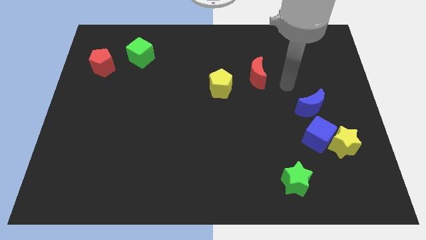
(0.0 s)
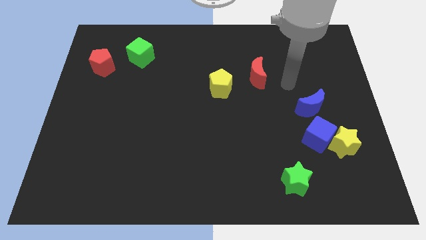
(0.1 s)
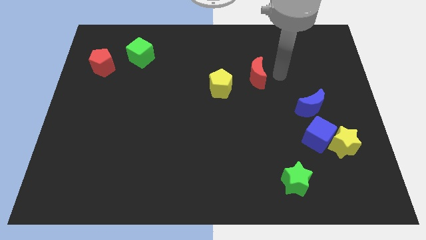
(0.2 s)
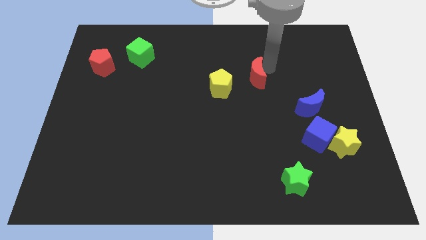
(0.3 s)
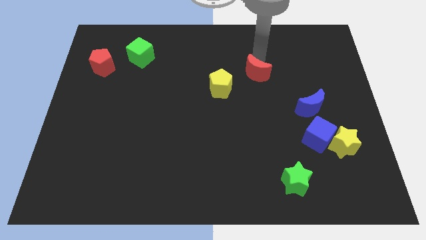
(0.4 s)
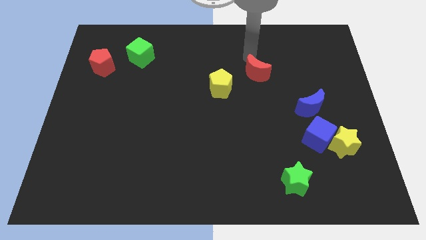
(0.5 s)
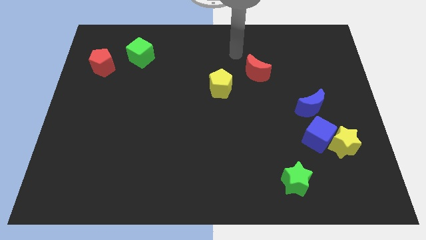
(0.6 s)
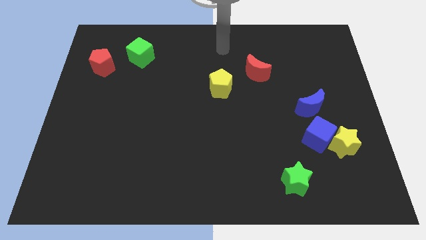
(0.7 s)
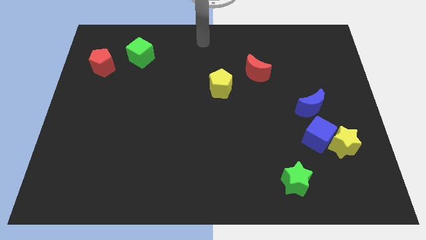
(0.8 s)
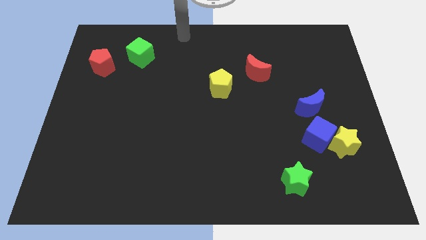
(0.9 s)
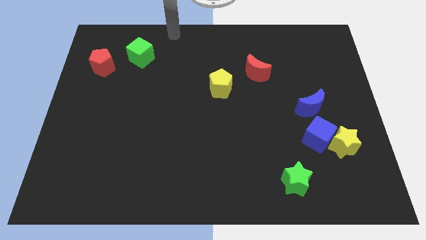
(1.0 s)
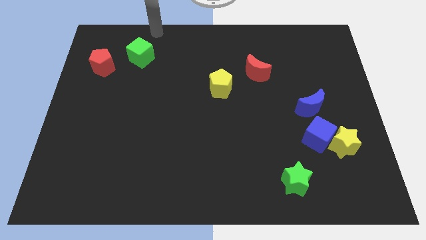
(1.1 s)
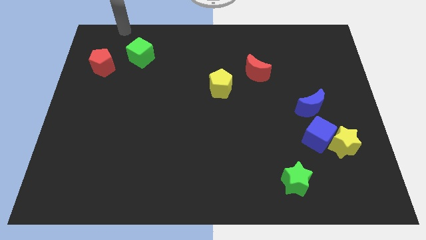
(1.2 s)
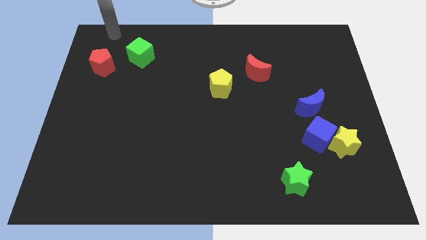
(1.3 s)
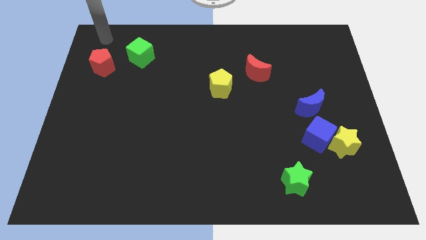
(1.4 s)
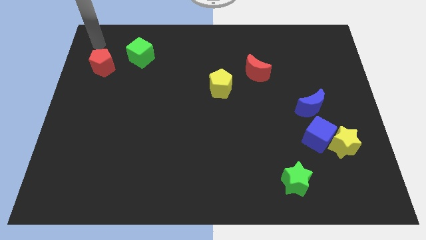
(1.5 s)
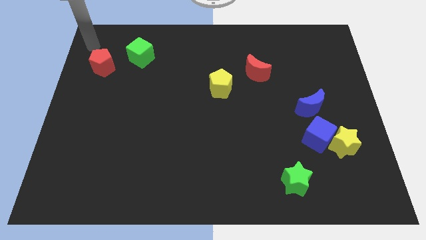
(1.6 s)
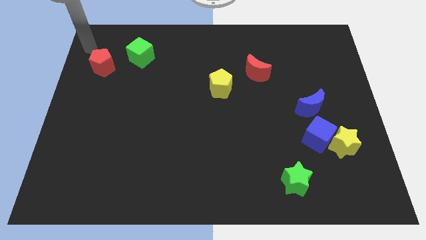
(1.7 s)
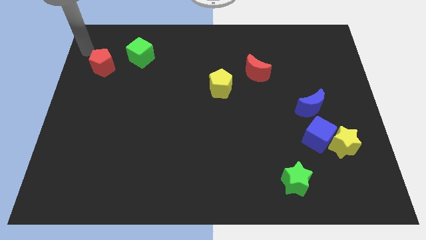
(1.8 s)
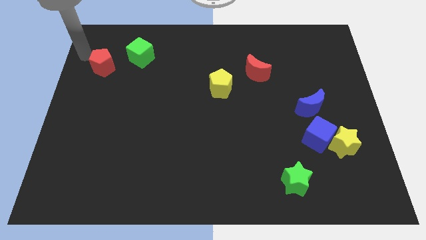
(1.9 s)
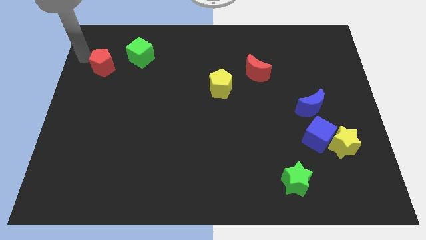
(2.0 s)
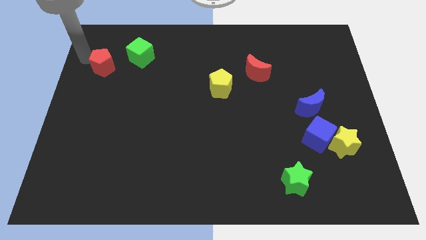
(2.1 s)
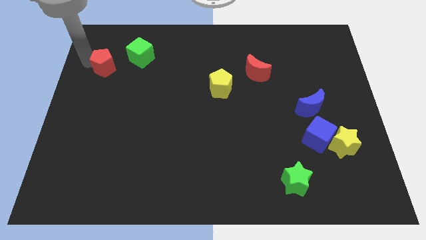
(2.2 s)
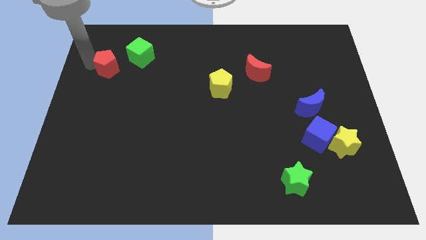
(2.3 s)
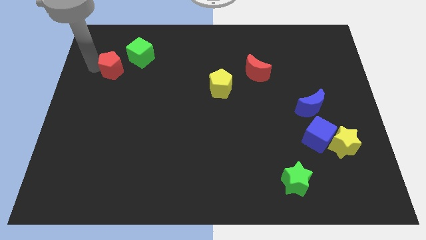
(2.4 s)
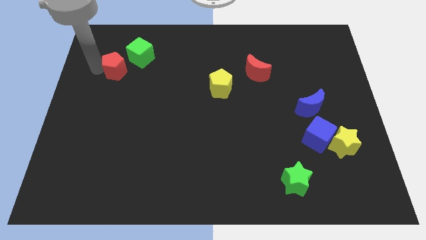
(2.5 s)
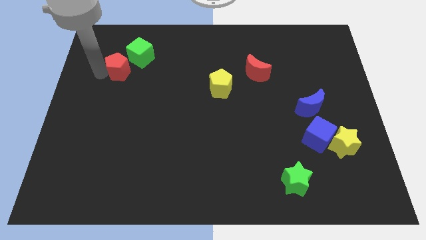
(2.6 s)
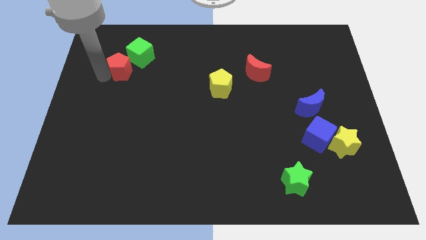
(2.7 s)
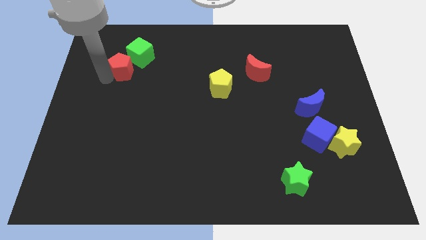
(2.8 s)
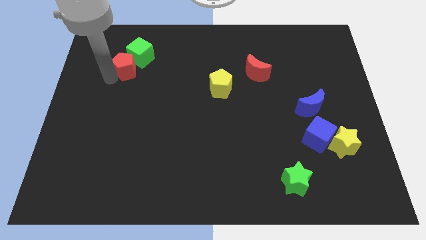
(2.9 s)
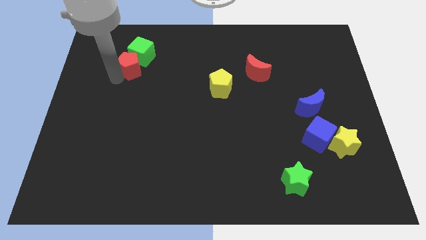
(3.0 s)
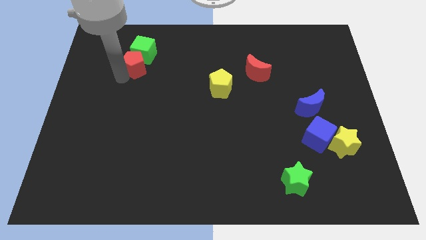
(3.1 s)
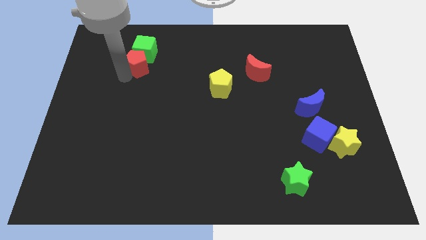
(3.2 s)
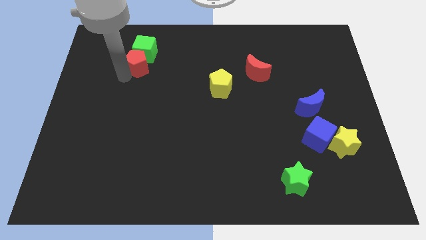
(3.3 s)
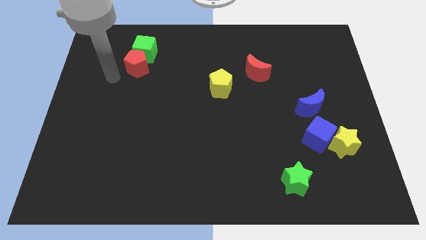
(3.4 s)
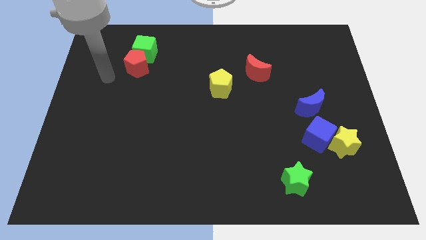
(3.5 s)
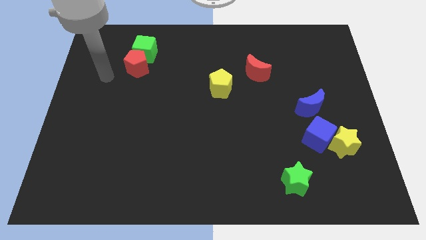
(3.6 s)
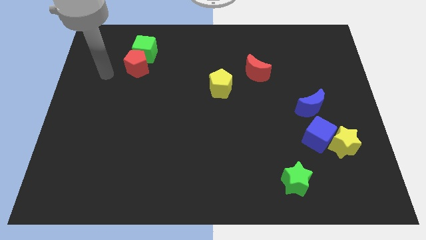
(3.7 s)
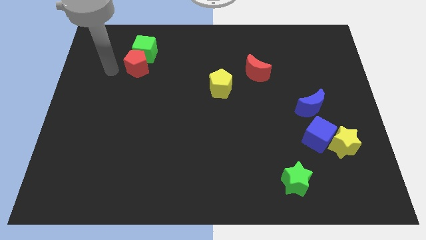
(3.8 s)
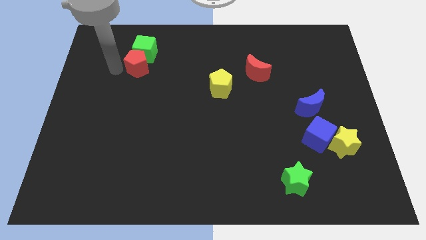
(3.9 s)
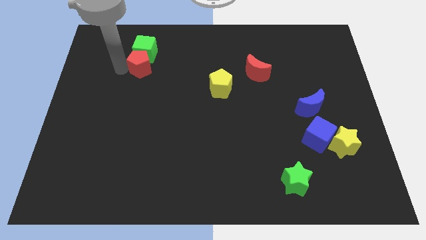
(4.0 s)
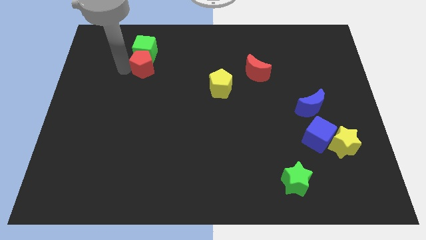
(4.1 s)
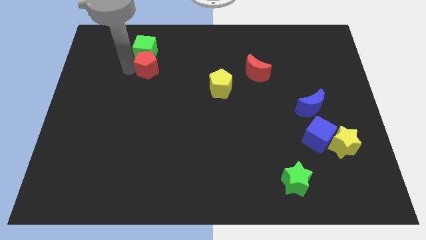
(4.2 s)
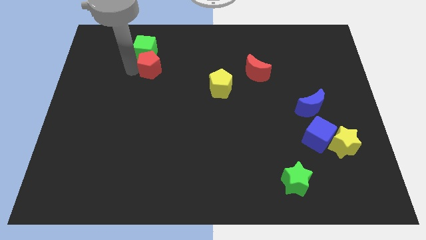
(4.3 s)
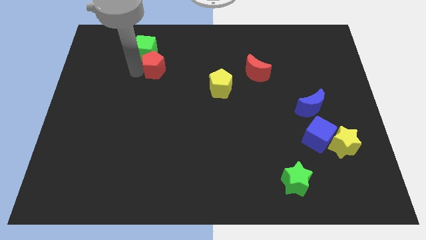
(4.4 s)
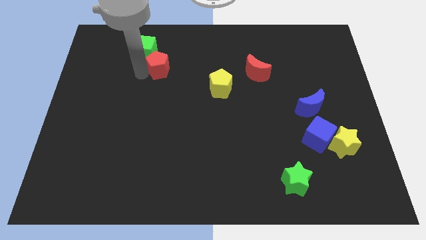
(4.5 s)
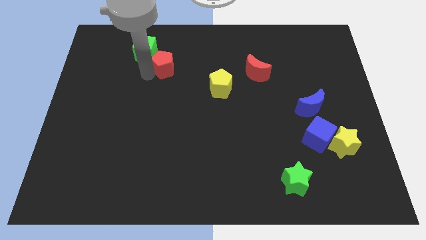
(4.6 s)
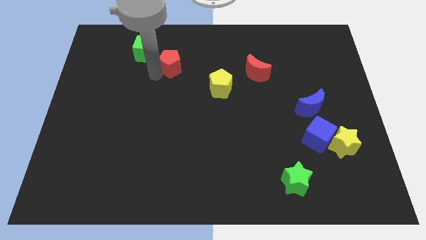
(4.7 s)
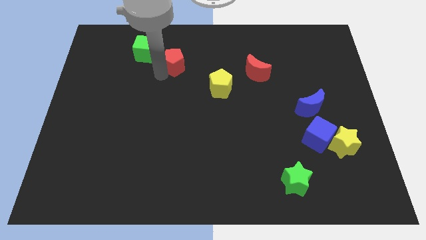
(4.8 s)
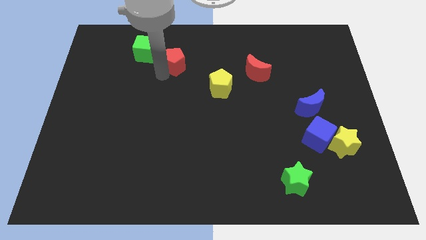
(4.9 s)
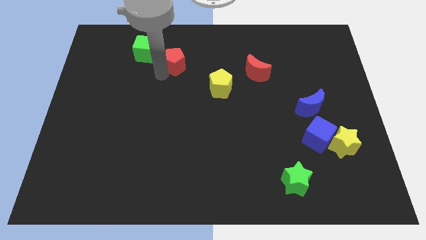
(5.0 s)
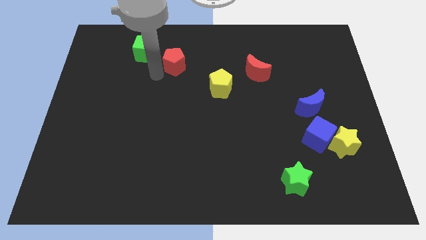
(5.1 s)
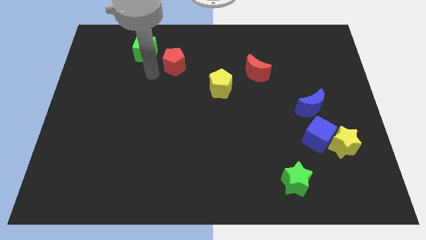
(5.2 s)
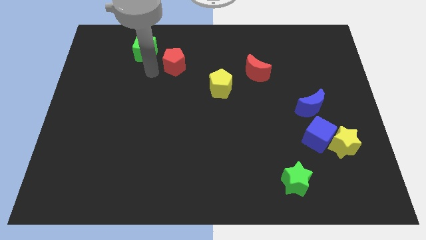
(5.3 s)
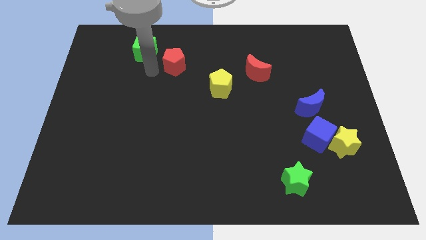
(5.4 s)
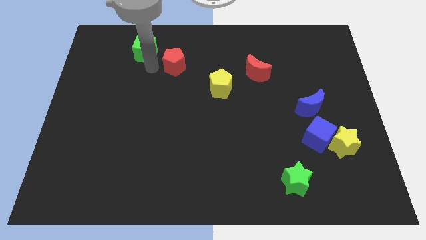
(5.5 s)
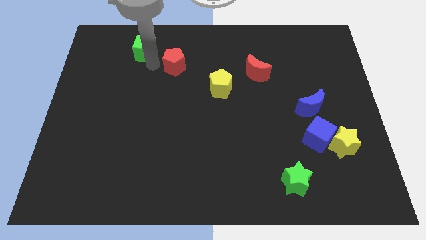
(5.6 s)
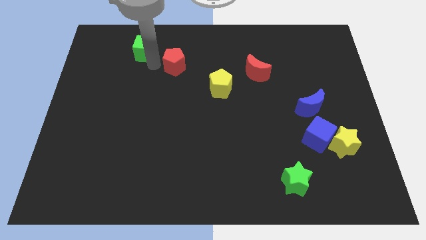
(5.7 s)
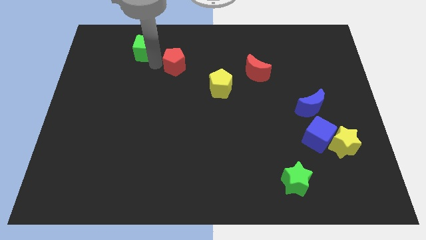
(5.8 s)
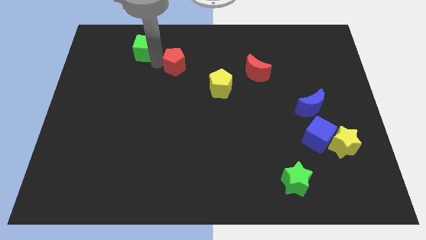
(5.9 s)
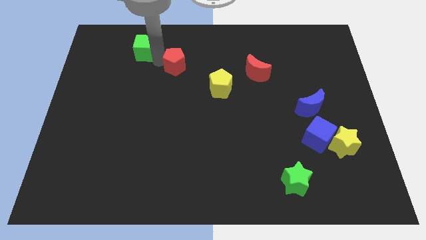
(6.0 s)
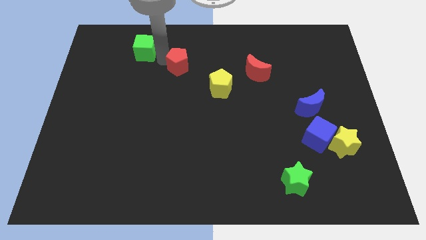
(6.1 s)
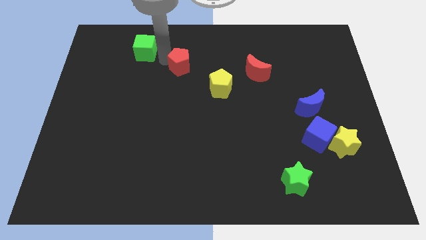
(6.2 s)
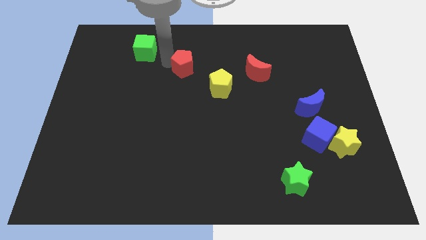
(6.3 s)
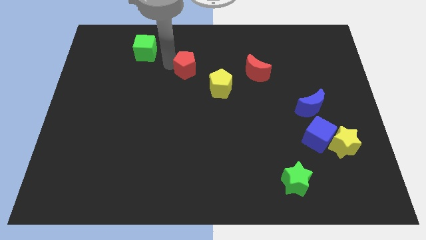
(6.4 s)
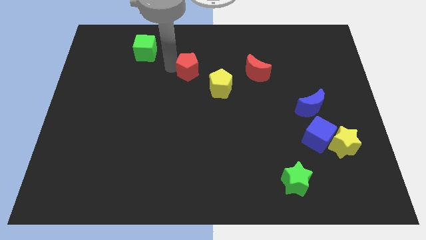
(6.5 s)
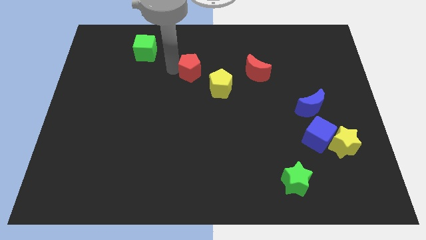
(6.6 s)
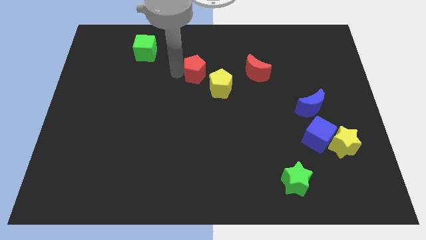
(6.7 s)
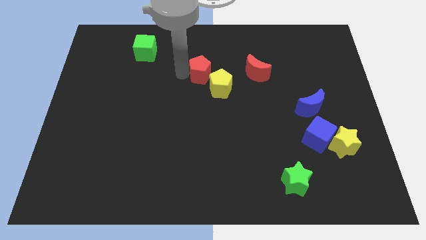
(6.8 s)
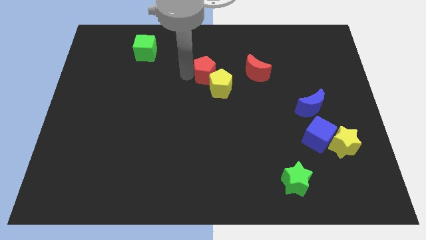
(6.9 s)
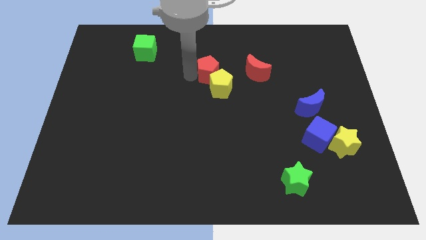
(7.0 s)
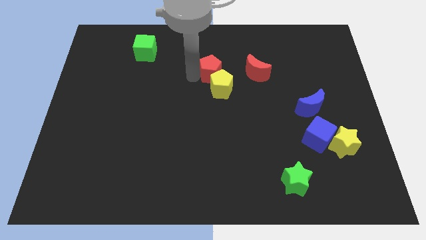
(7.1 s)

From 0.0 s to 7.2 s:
put the red pentagon towards the yellow pentagon

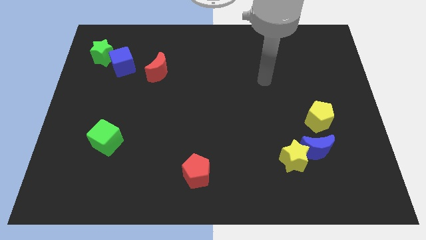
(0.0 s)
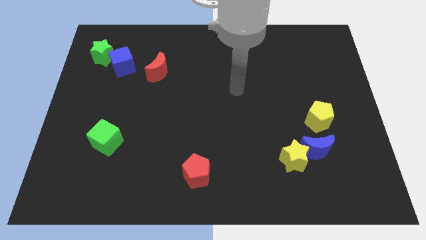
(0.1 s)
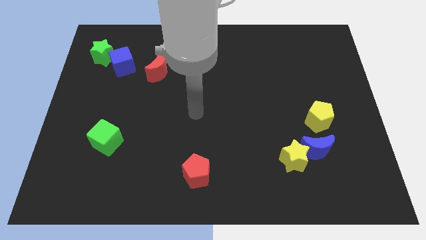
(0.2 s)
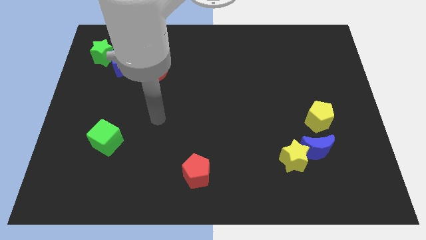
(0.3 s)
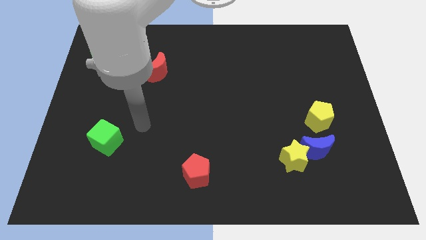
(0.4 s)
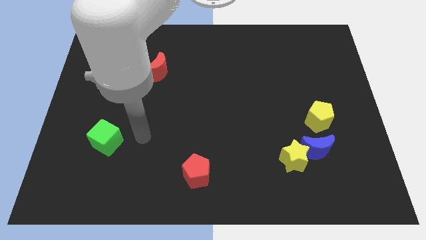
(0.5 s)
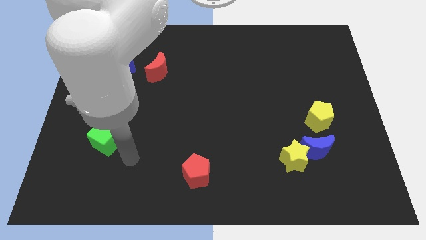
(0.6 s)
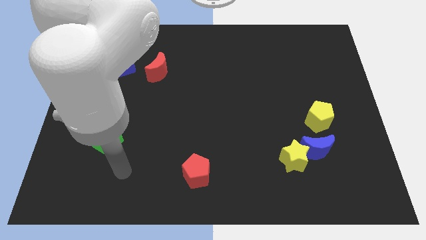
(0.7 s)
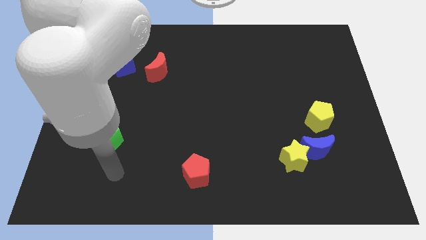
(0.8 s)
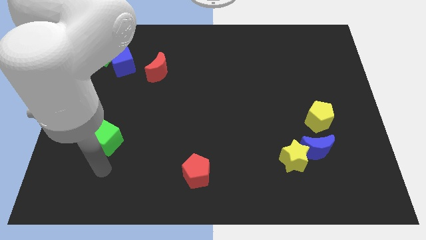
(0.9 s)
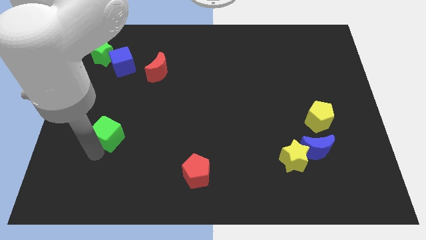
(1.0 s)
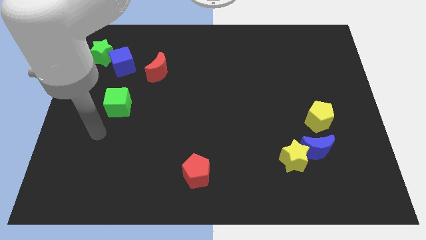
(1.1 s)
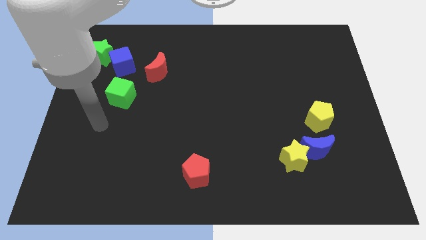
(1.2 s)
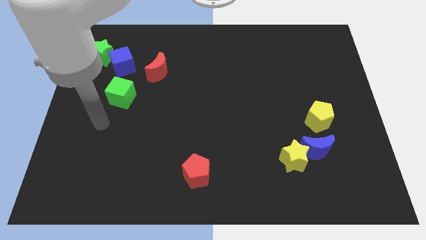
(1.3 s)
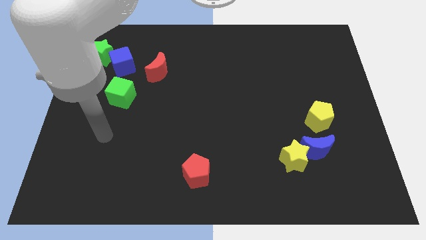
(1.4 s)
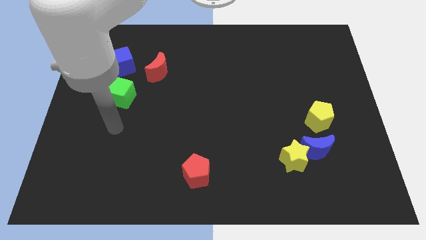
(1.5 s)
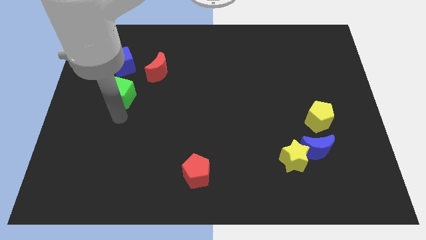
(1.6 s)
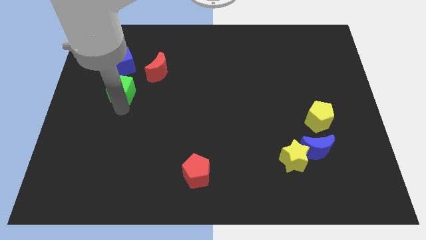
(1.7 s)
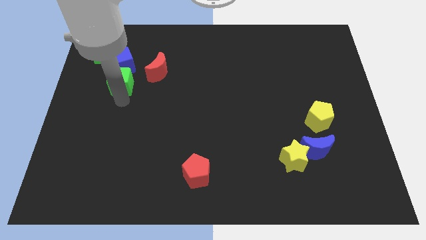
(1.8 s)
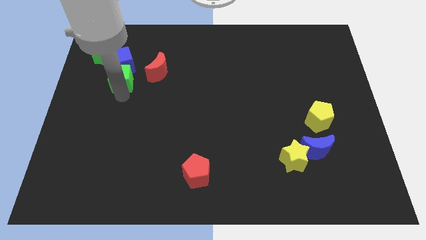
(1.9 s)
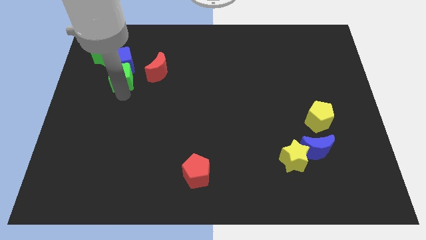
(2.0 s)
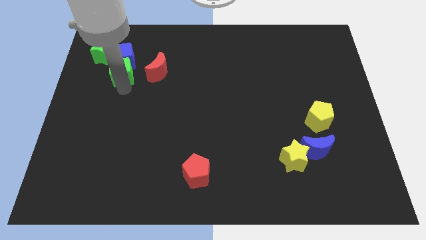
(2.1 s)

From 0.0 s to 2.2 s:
slide the green cube next to the blue cube
